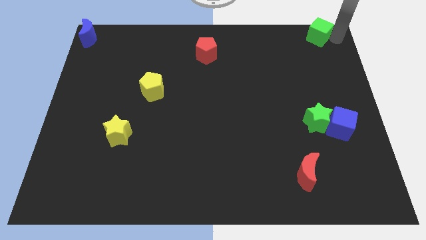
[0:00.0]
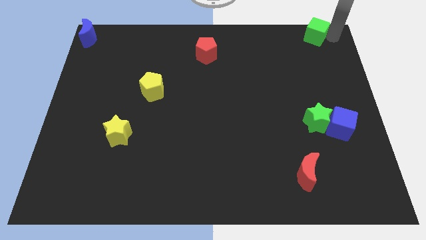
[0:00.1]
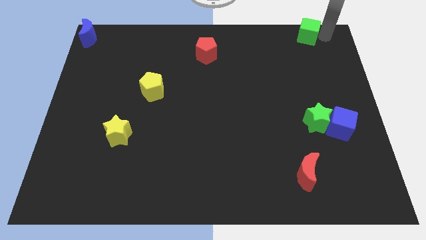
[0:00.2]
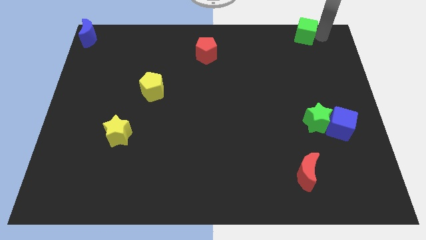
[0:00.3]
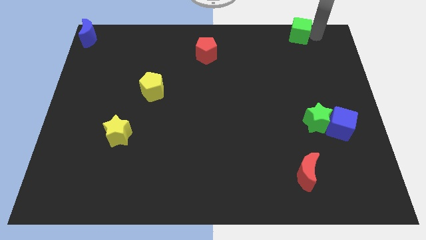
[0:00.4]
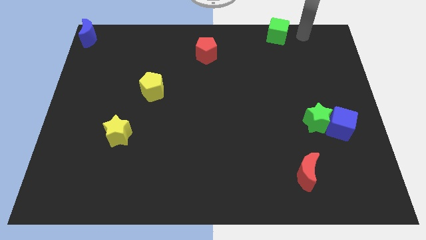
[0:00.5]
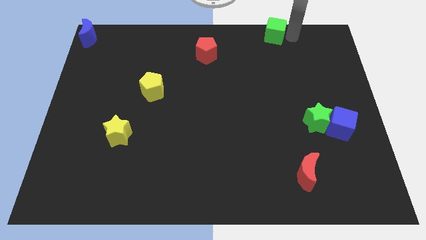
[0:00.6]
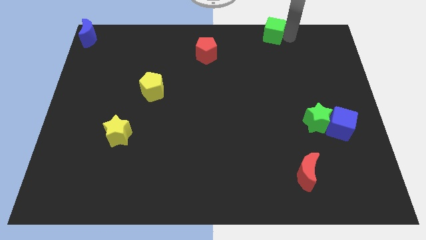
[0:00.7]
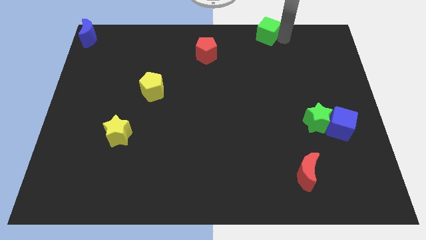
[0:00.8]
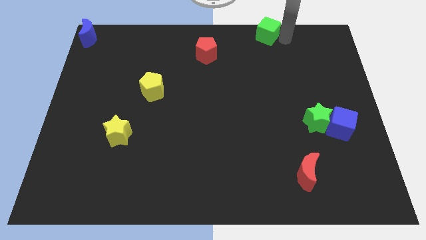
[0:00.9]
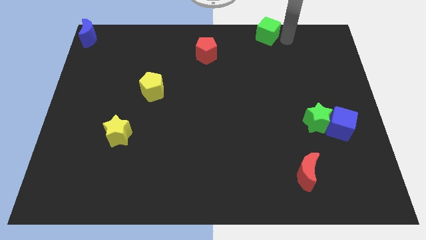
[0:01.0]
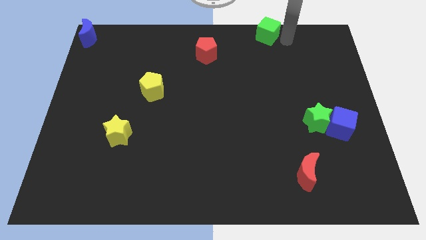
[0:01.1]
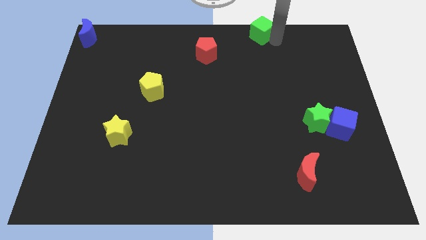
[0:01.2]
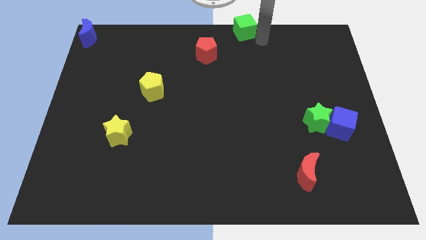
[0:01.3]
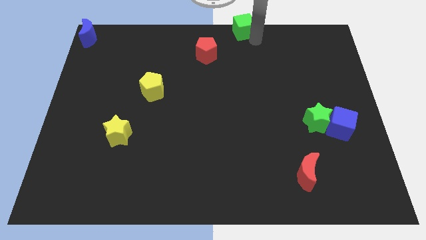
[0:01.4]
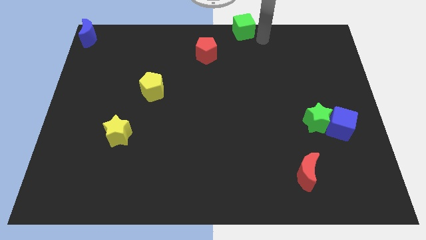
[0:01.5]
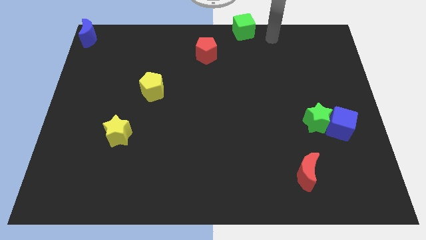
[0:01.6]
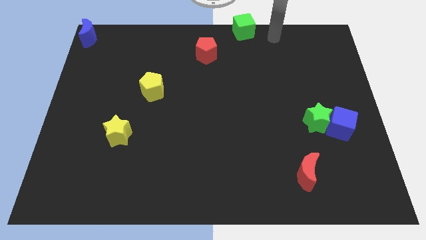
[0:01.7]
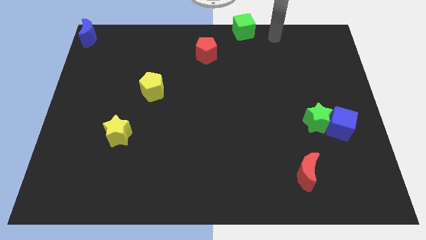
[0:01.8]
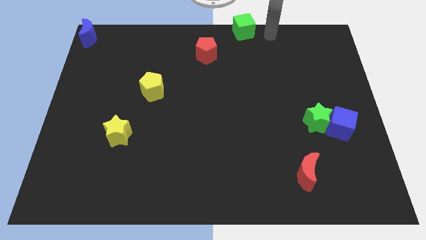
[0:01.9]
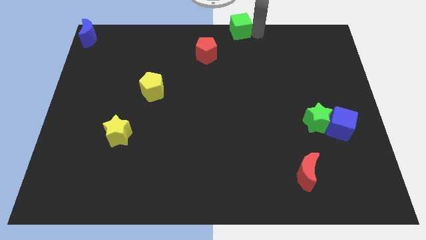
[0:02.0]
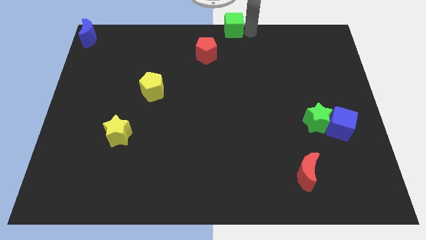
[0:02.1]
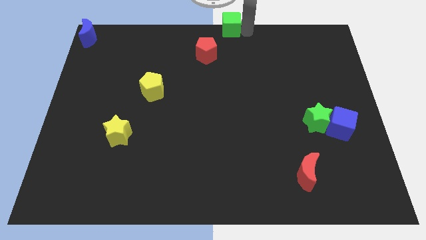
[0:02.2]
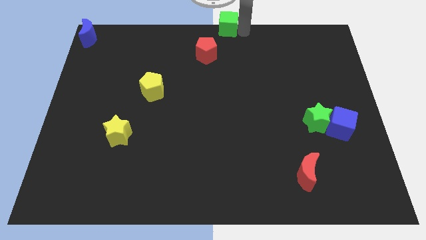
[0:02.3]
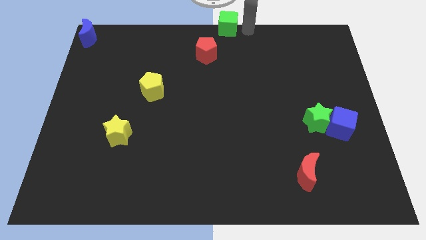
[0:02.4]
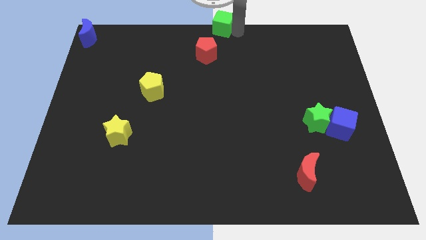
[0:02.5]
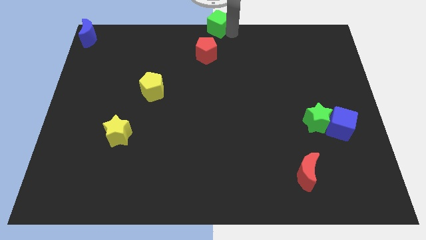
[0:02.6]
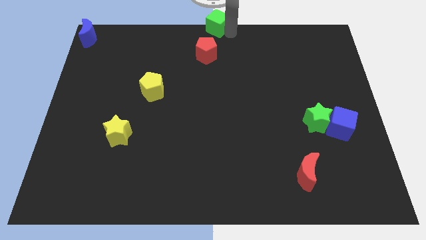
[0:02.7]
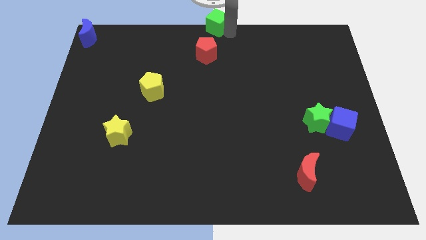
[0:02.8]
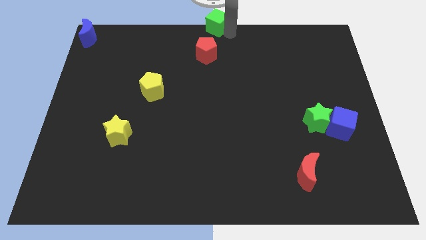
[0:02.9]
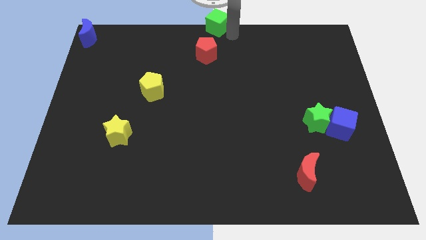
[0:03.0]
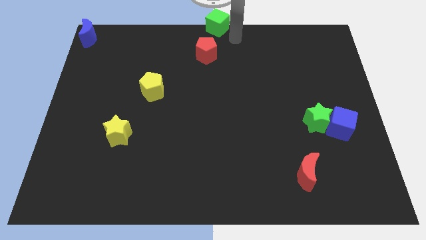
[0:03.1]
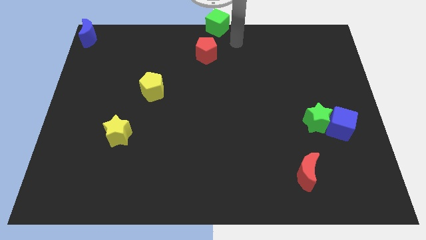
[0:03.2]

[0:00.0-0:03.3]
place the green cube to the top center of the board

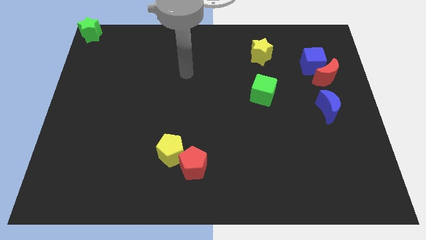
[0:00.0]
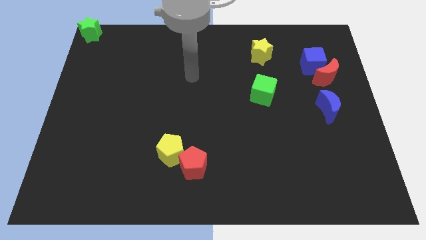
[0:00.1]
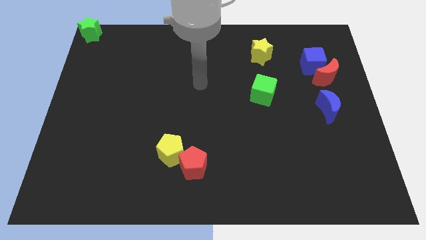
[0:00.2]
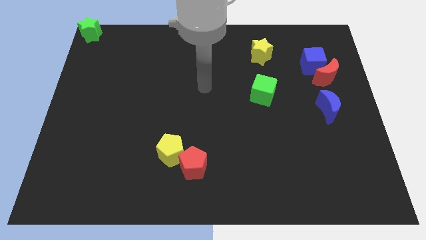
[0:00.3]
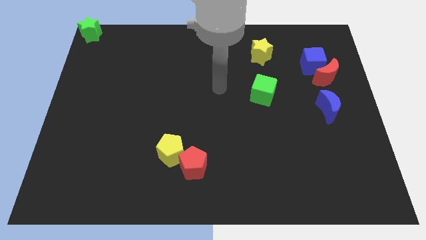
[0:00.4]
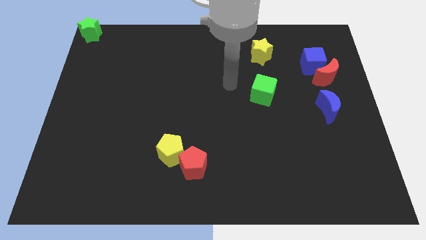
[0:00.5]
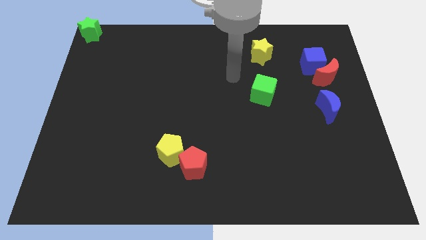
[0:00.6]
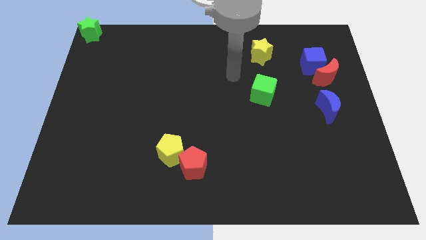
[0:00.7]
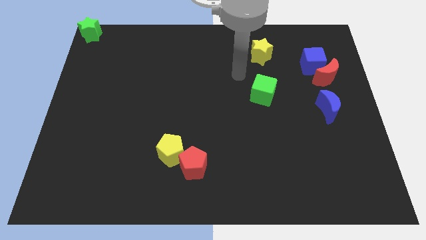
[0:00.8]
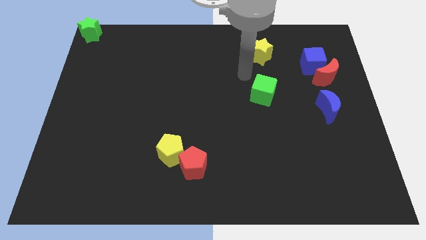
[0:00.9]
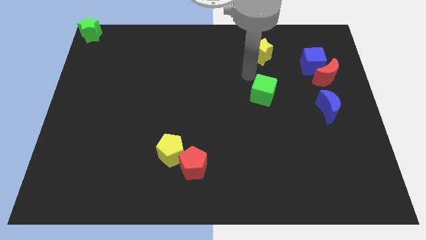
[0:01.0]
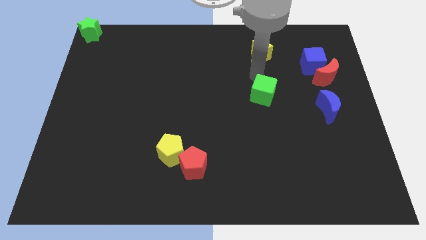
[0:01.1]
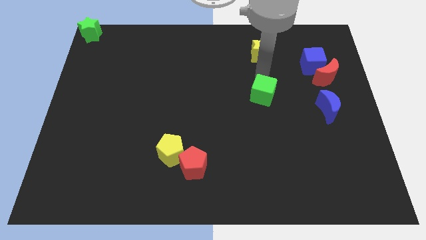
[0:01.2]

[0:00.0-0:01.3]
place arm on the top of green cube

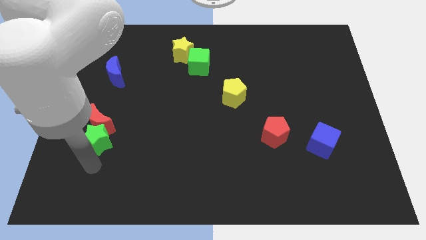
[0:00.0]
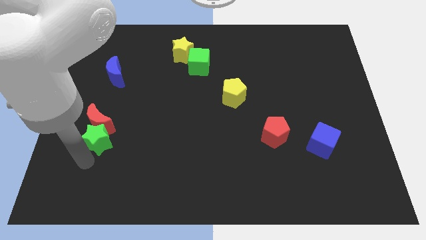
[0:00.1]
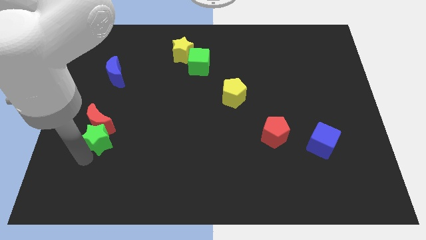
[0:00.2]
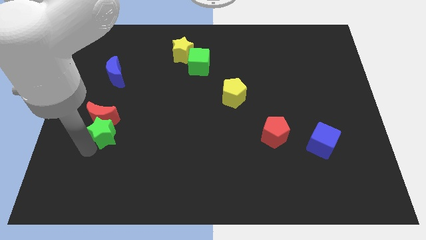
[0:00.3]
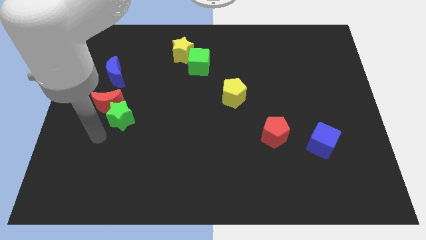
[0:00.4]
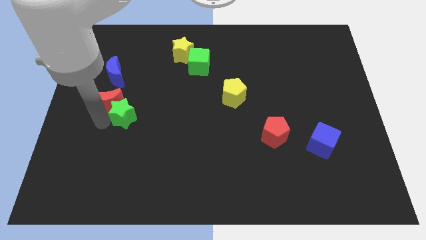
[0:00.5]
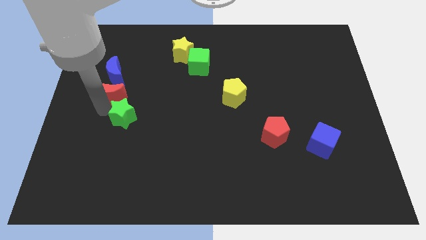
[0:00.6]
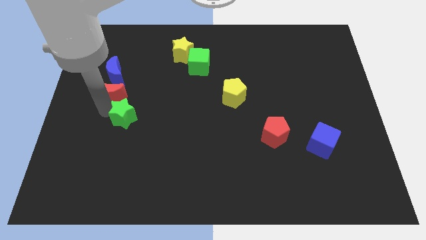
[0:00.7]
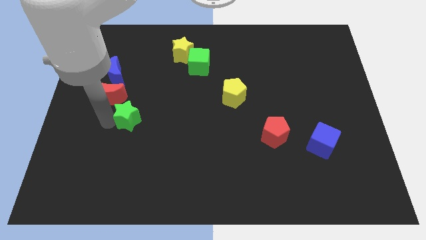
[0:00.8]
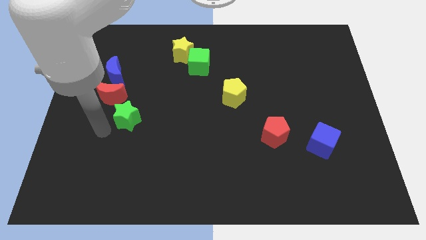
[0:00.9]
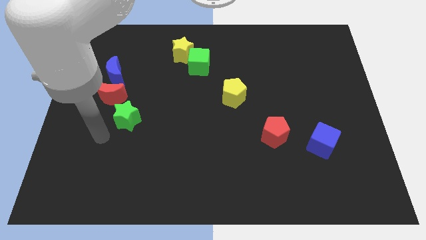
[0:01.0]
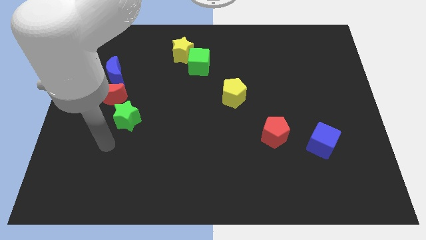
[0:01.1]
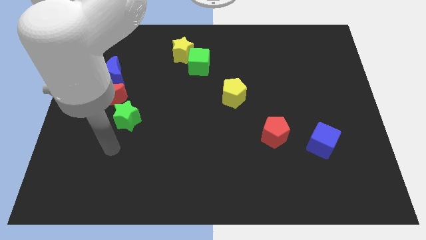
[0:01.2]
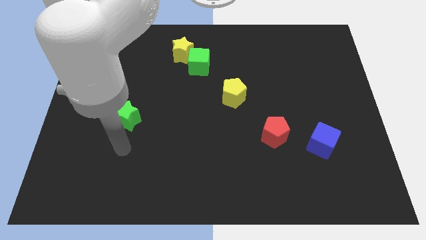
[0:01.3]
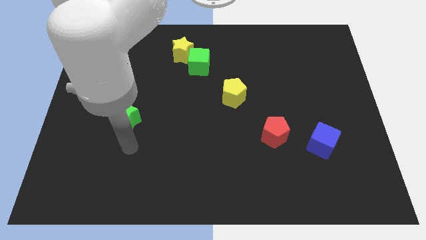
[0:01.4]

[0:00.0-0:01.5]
separate the red moon from the green star

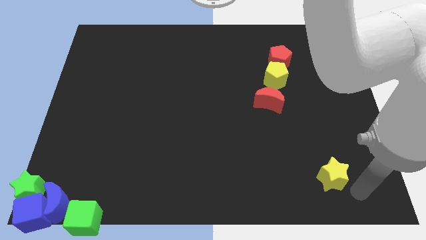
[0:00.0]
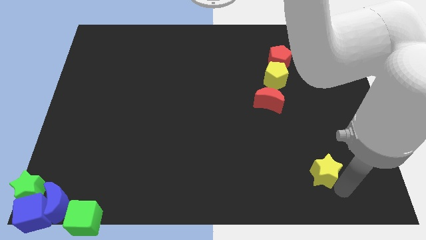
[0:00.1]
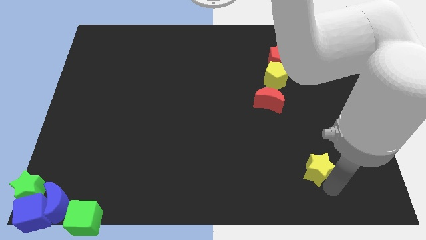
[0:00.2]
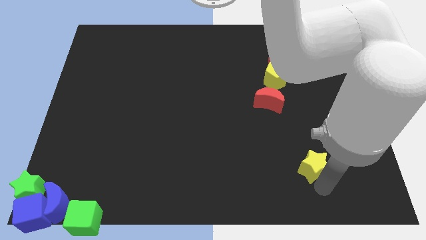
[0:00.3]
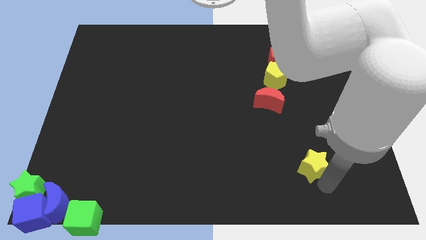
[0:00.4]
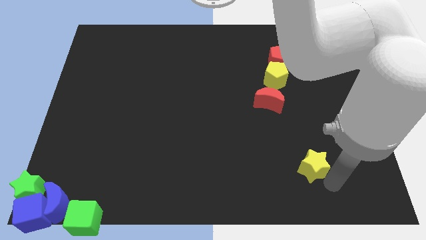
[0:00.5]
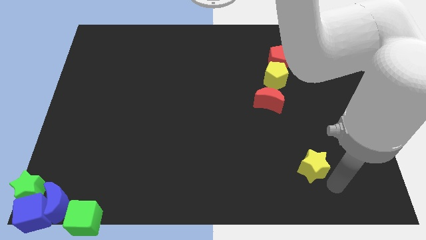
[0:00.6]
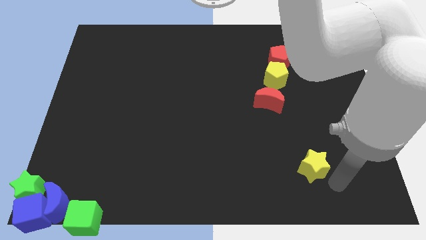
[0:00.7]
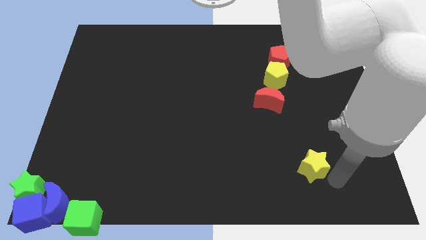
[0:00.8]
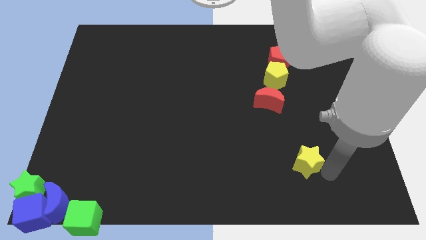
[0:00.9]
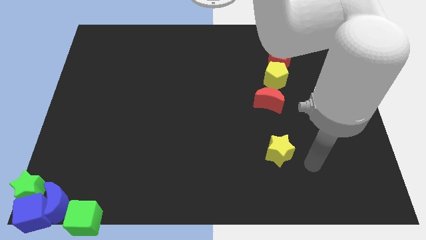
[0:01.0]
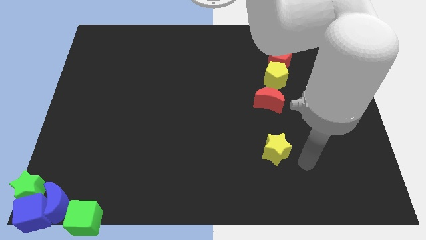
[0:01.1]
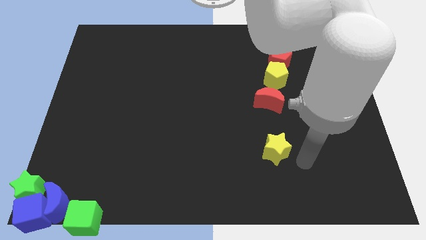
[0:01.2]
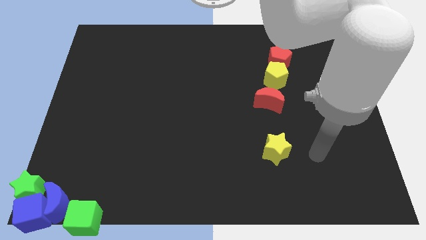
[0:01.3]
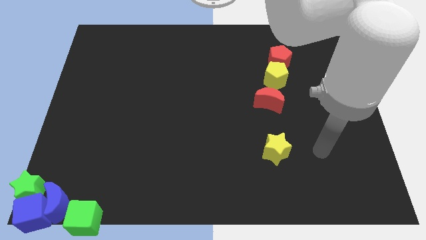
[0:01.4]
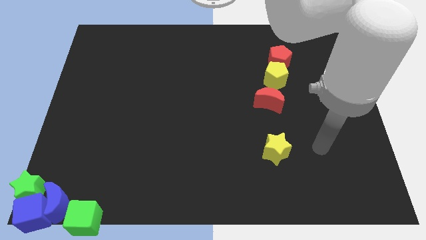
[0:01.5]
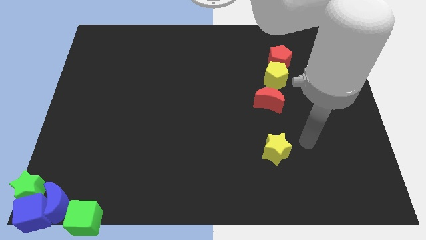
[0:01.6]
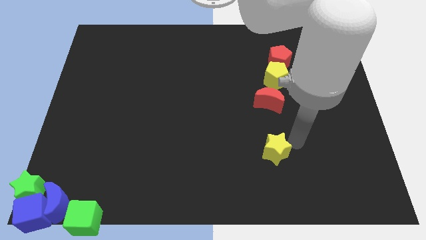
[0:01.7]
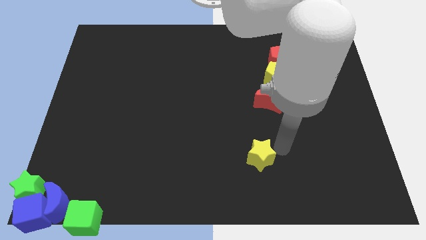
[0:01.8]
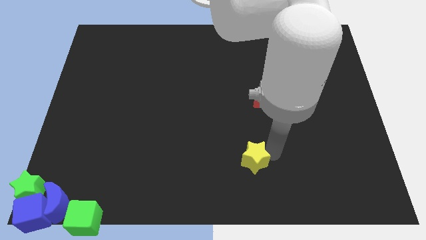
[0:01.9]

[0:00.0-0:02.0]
place the yellow star below the red moon

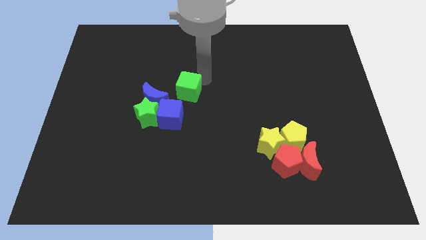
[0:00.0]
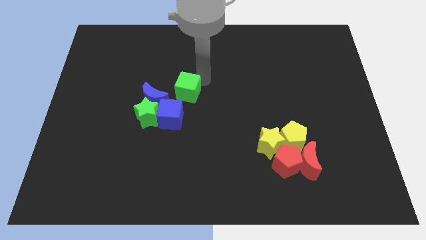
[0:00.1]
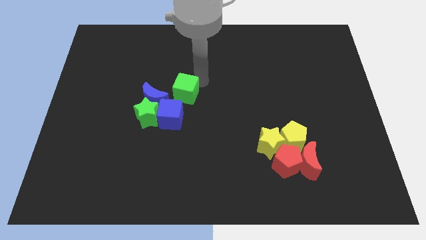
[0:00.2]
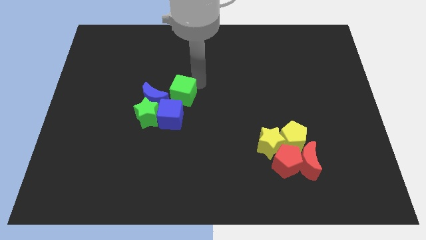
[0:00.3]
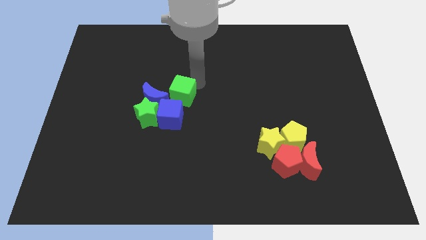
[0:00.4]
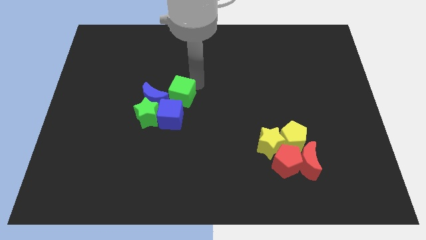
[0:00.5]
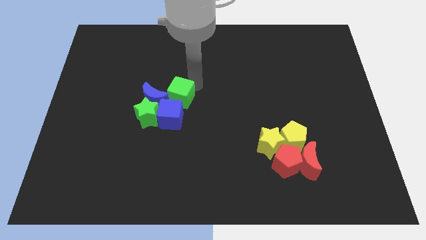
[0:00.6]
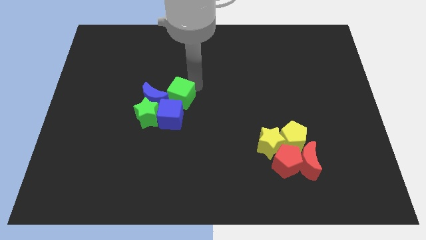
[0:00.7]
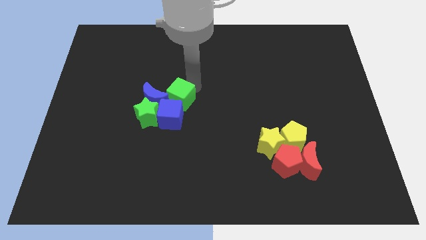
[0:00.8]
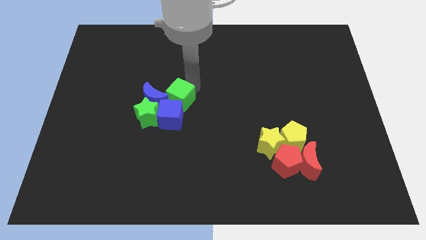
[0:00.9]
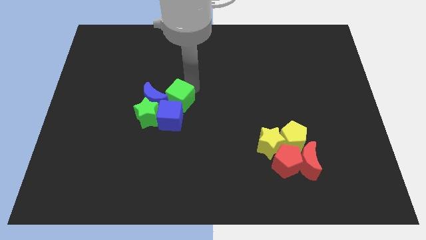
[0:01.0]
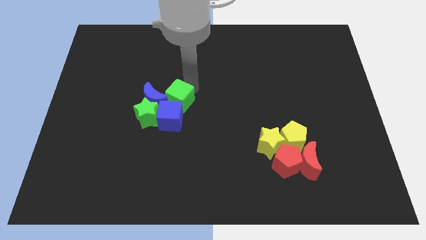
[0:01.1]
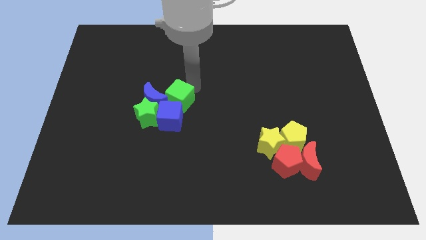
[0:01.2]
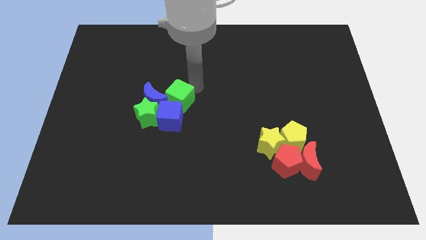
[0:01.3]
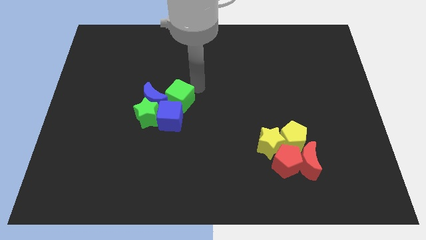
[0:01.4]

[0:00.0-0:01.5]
push the green cube into the blue cube and blue crescent
